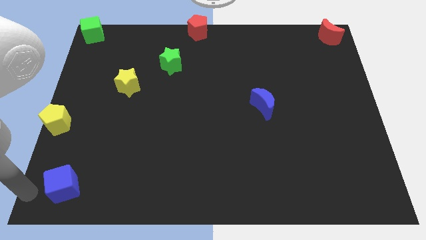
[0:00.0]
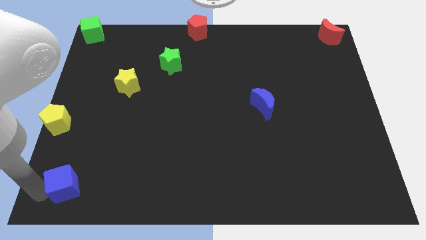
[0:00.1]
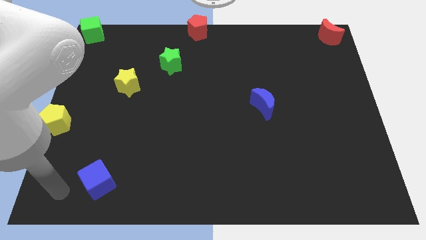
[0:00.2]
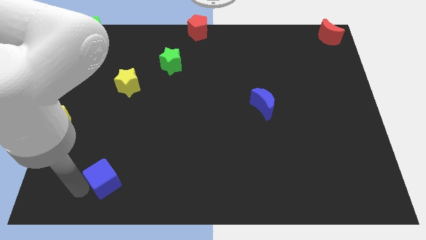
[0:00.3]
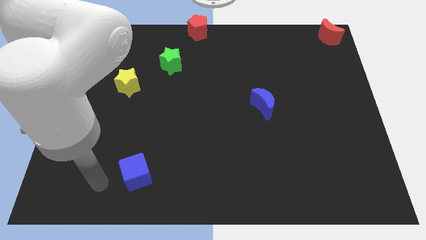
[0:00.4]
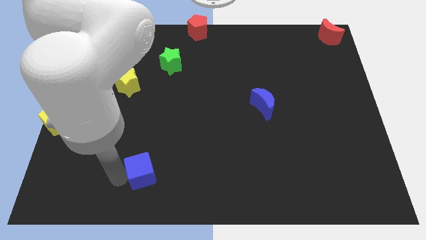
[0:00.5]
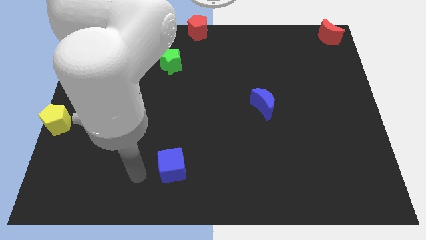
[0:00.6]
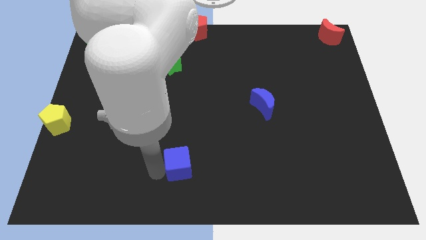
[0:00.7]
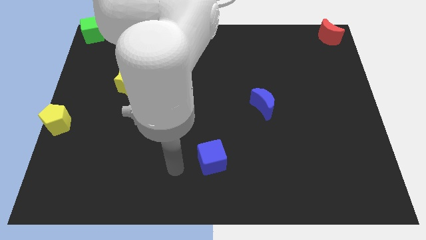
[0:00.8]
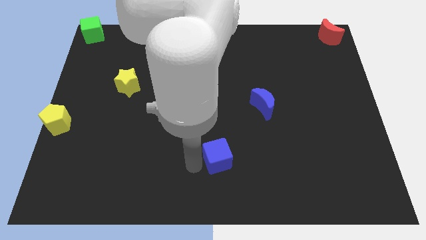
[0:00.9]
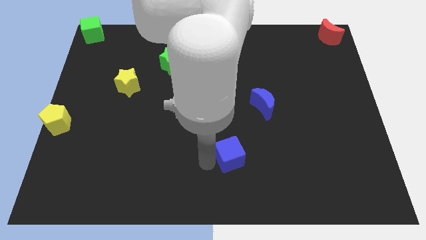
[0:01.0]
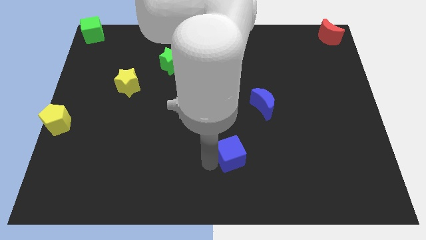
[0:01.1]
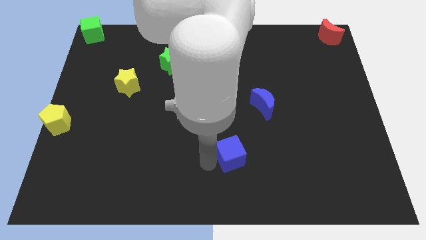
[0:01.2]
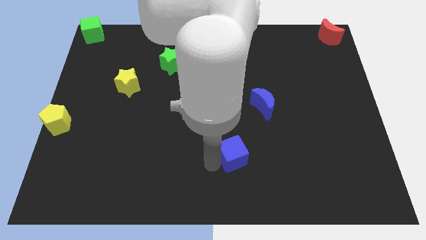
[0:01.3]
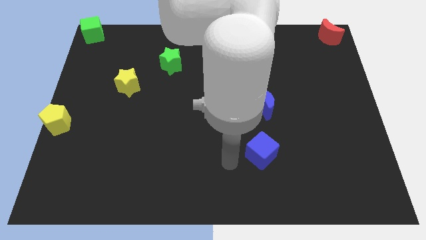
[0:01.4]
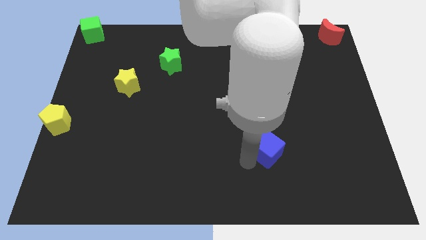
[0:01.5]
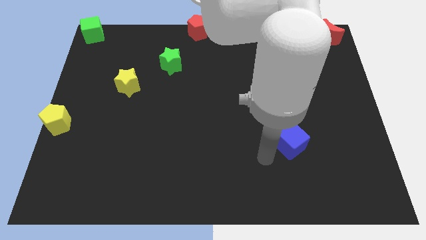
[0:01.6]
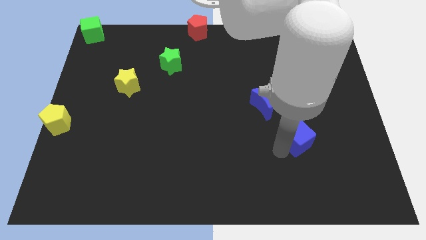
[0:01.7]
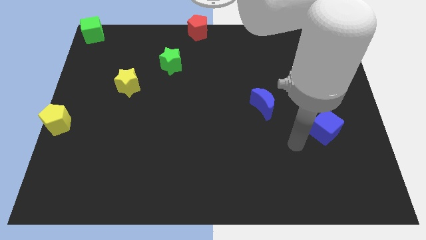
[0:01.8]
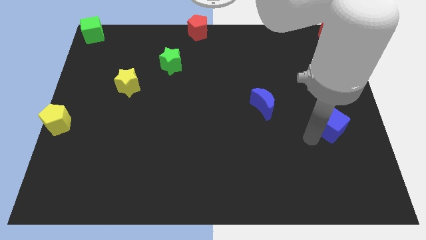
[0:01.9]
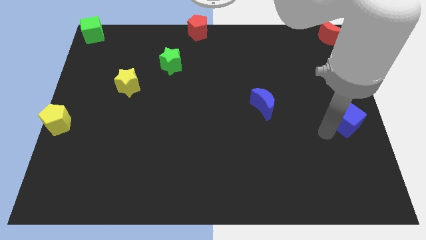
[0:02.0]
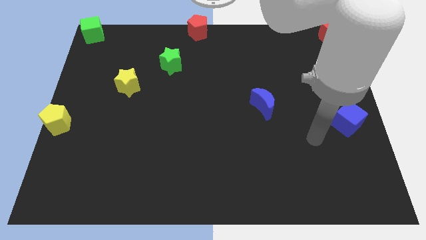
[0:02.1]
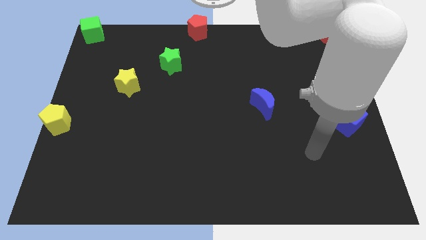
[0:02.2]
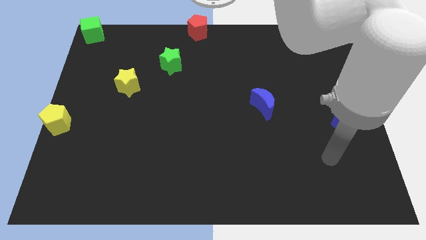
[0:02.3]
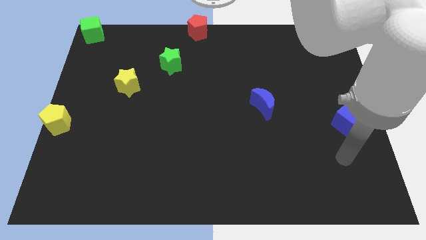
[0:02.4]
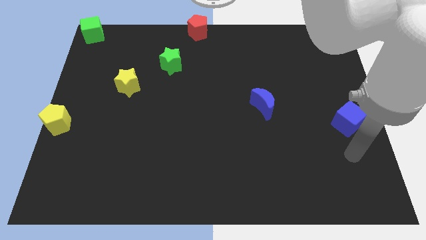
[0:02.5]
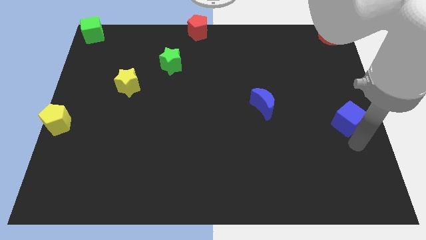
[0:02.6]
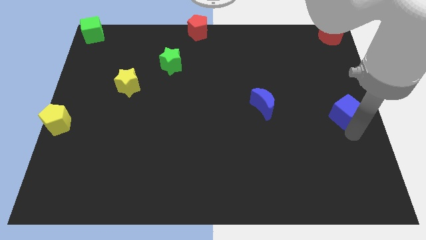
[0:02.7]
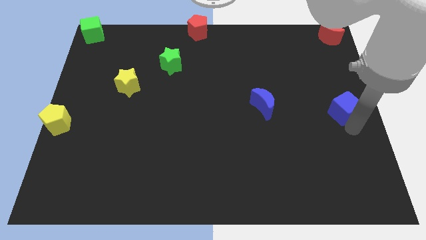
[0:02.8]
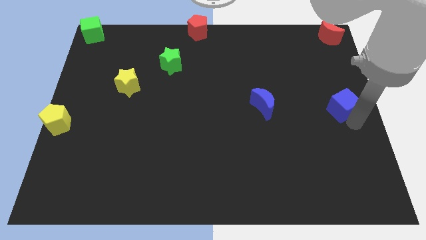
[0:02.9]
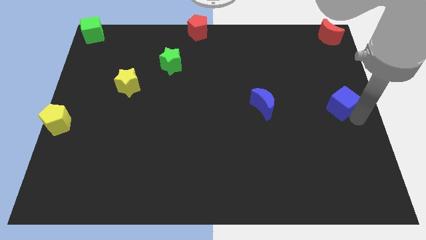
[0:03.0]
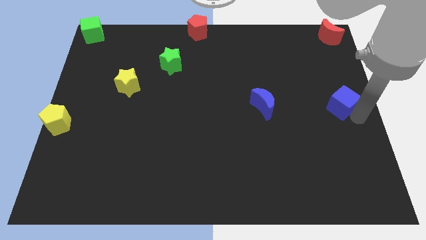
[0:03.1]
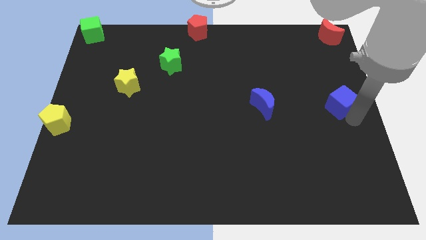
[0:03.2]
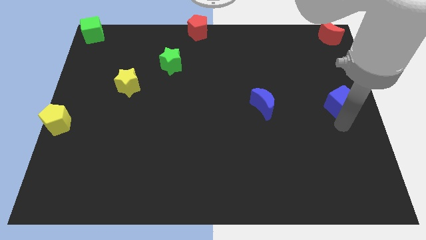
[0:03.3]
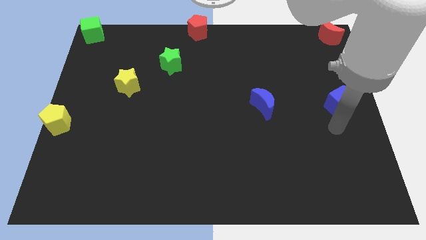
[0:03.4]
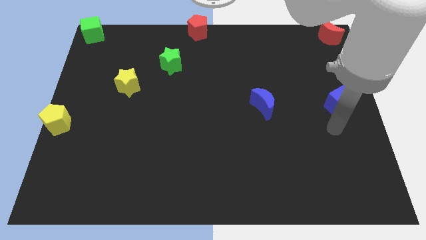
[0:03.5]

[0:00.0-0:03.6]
push the blue cube to the centre right of the board

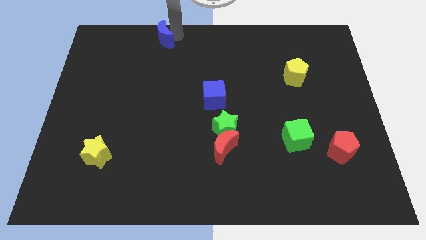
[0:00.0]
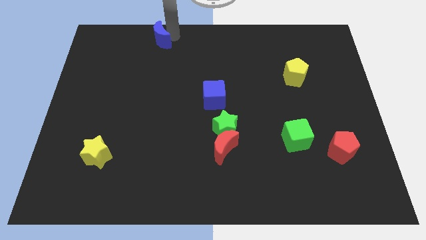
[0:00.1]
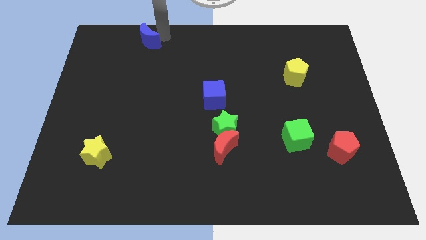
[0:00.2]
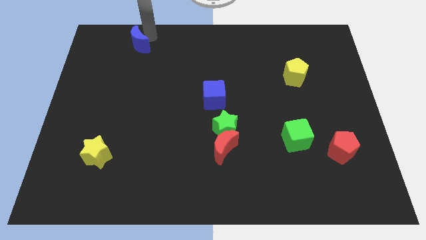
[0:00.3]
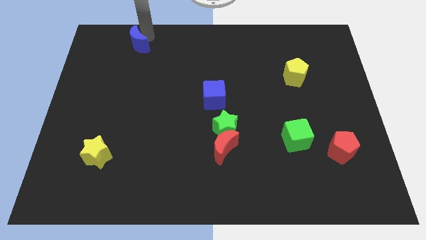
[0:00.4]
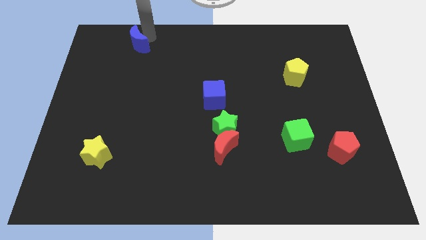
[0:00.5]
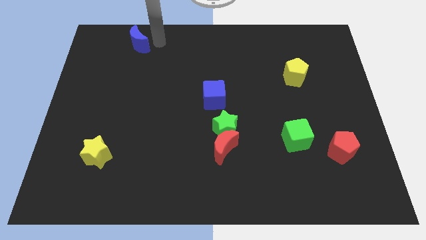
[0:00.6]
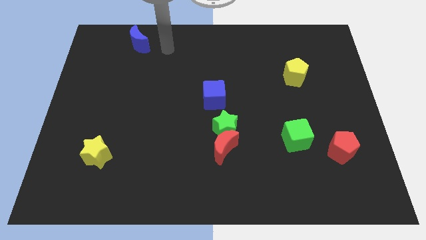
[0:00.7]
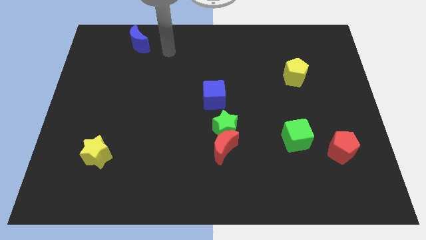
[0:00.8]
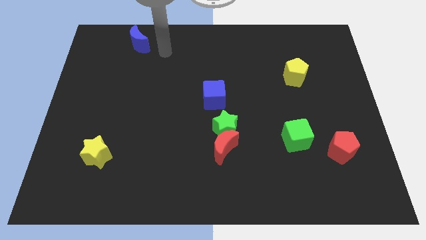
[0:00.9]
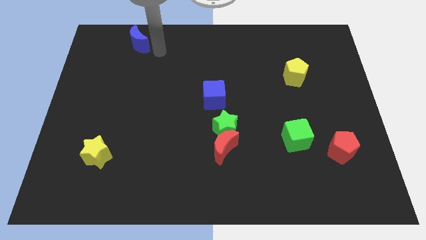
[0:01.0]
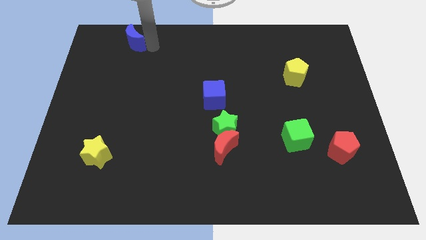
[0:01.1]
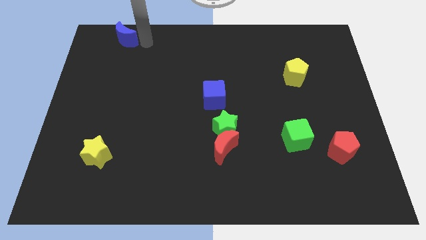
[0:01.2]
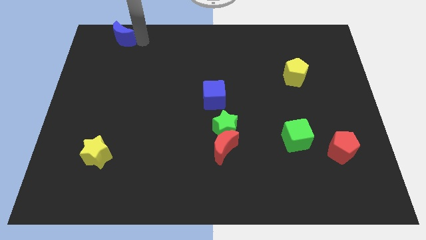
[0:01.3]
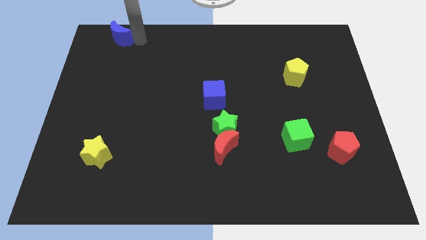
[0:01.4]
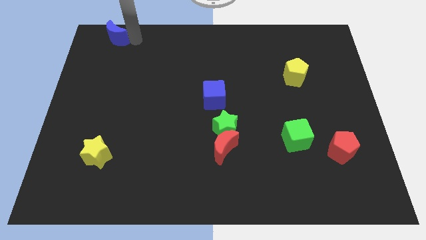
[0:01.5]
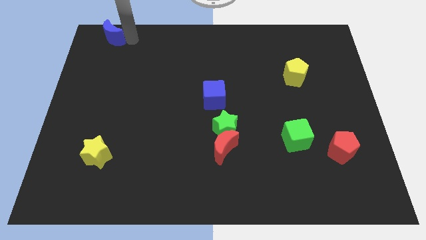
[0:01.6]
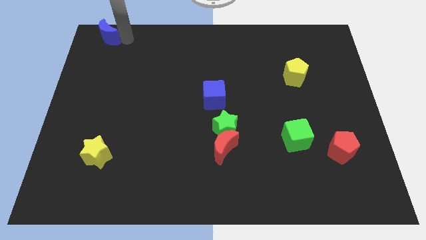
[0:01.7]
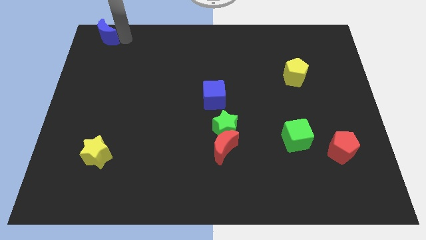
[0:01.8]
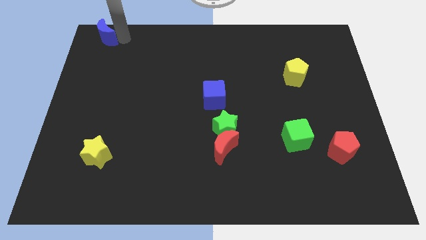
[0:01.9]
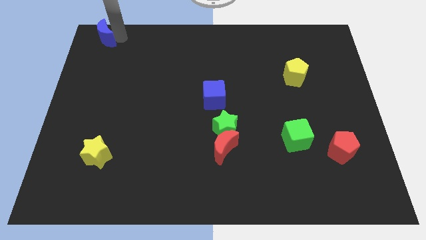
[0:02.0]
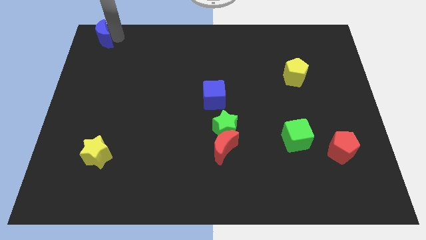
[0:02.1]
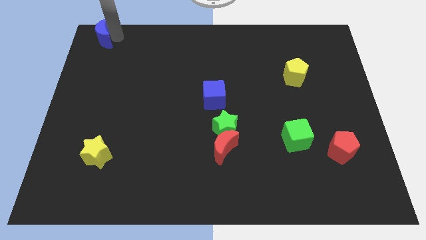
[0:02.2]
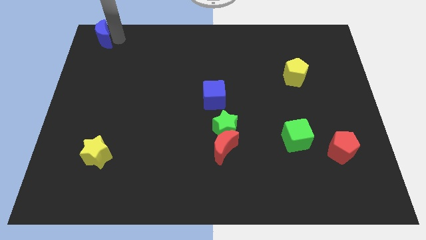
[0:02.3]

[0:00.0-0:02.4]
slide the blue moon to the top left side of the board

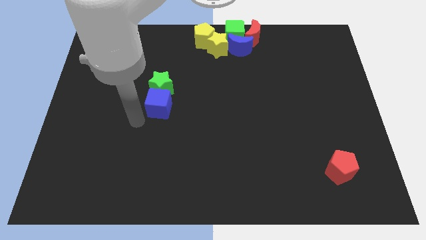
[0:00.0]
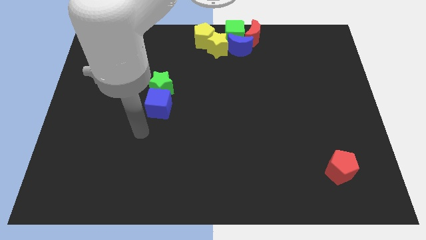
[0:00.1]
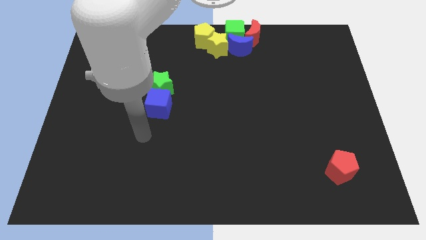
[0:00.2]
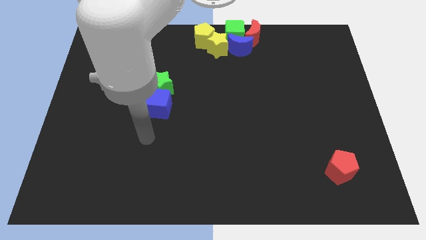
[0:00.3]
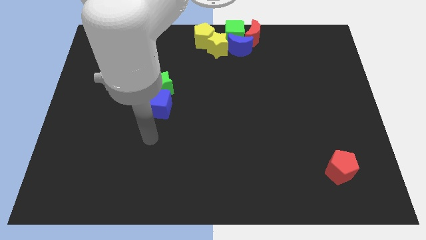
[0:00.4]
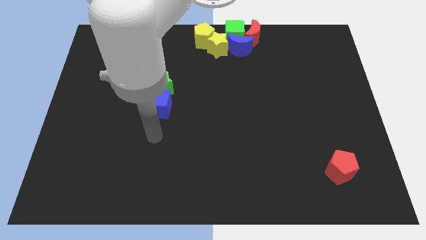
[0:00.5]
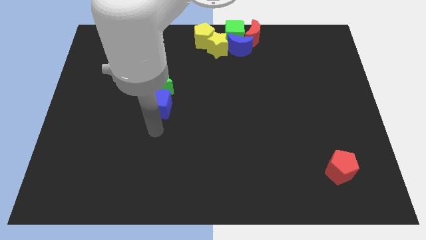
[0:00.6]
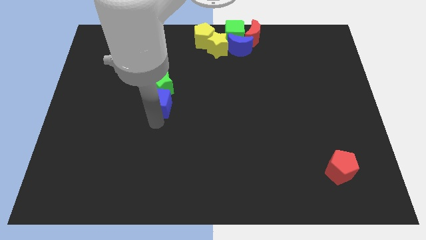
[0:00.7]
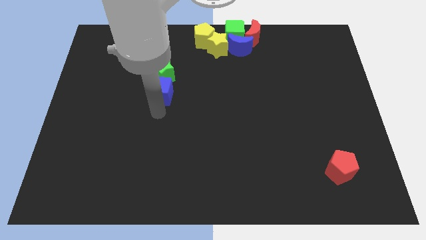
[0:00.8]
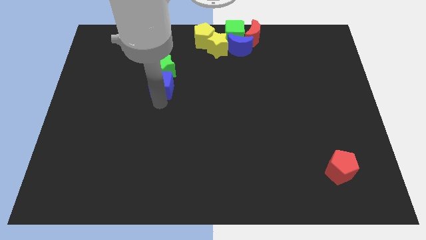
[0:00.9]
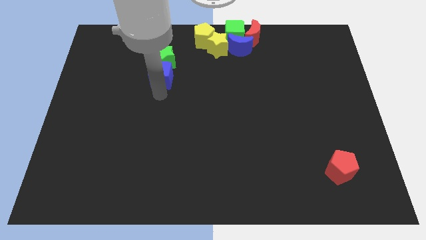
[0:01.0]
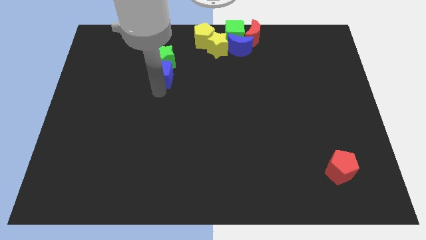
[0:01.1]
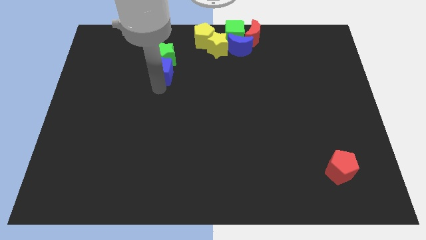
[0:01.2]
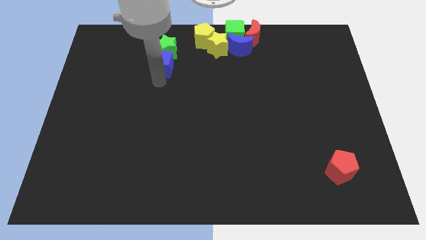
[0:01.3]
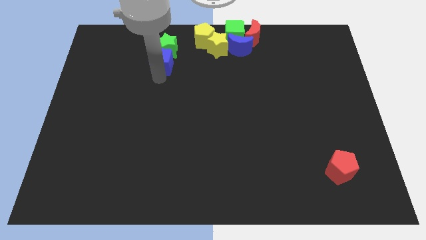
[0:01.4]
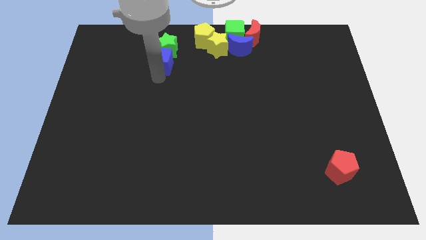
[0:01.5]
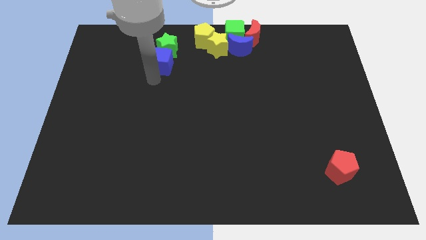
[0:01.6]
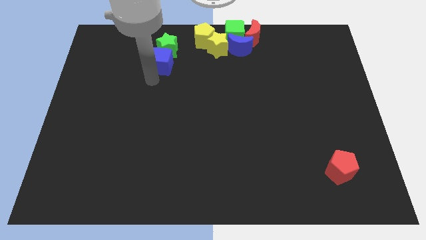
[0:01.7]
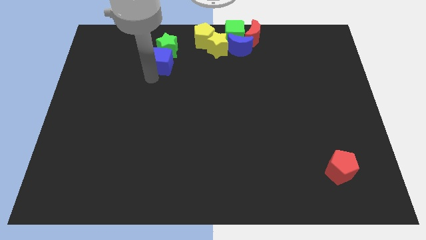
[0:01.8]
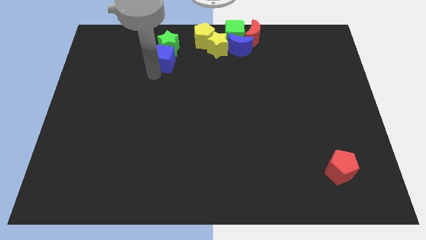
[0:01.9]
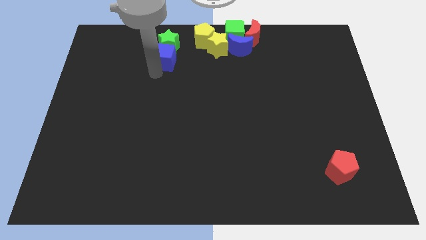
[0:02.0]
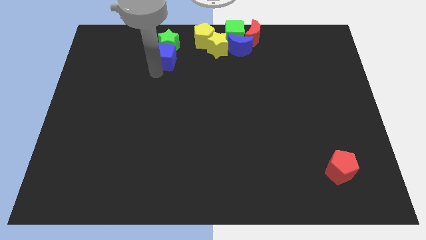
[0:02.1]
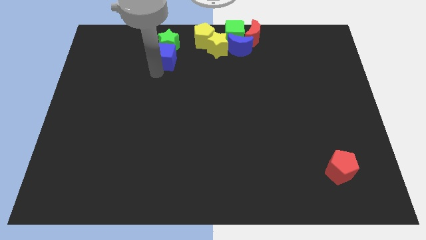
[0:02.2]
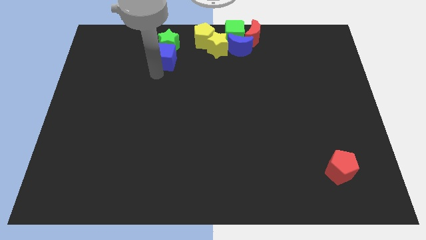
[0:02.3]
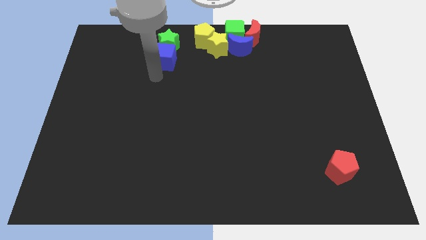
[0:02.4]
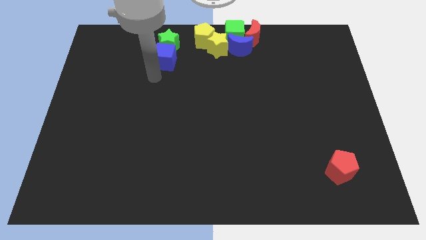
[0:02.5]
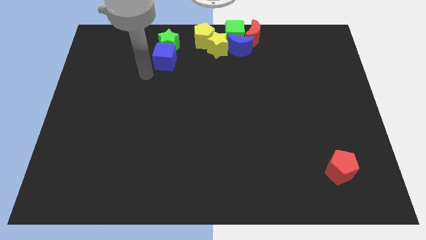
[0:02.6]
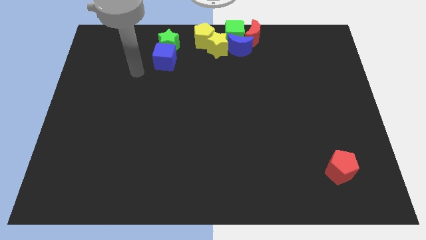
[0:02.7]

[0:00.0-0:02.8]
move the blue cube green star to the upward of the board

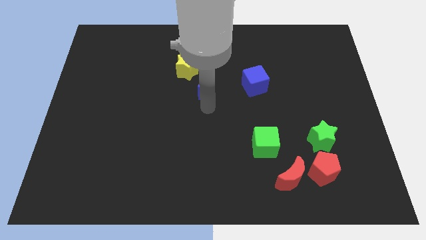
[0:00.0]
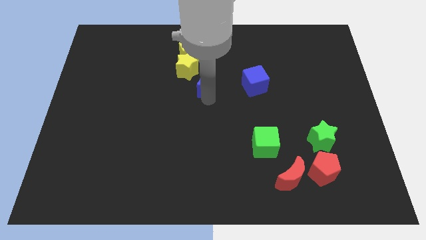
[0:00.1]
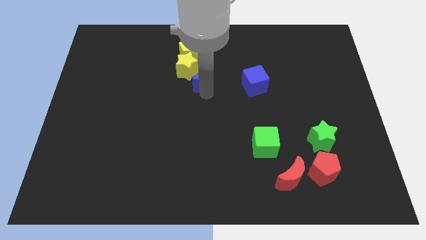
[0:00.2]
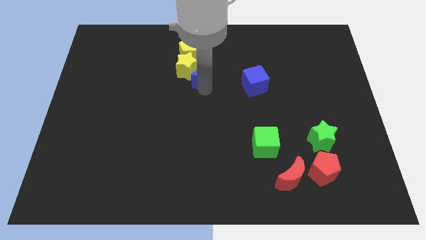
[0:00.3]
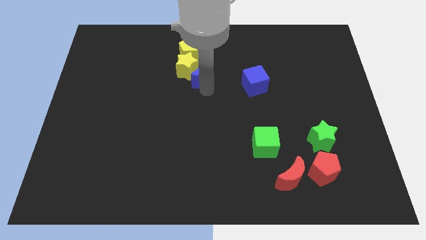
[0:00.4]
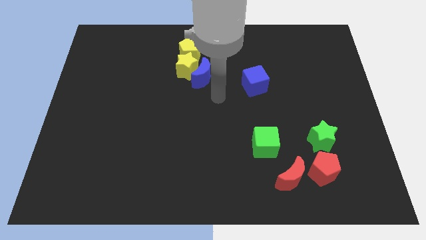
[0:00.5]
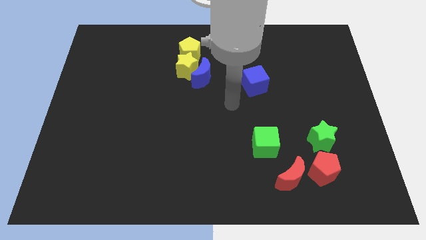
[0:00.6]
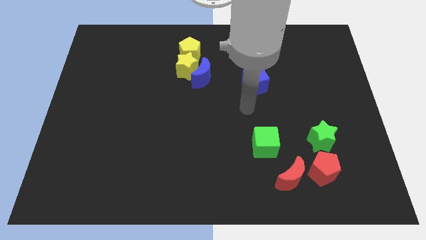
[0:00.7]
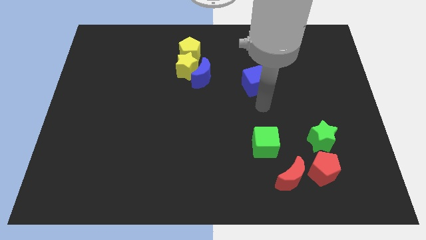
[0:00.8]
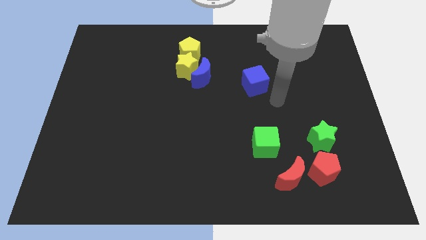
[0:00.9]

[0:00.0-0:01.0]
move the blue crescent close to the yellow star
